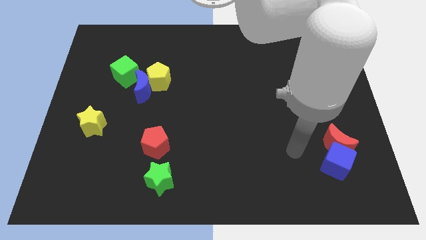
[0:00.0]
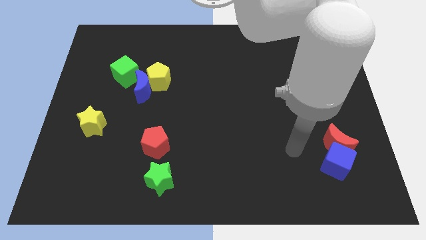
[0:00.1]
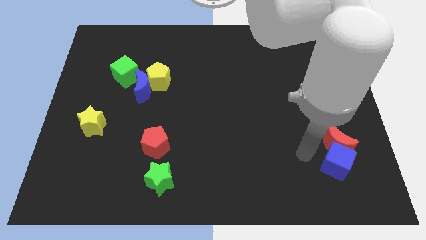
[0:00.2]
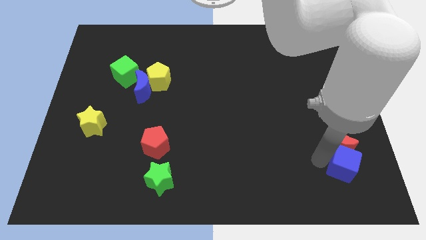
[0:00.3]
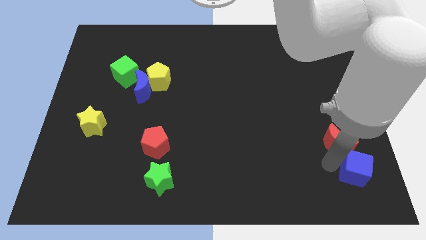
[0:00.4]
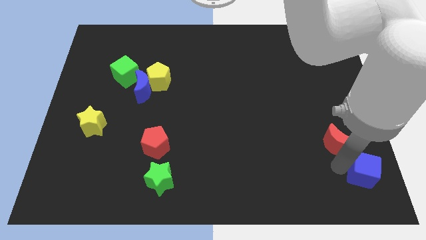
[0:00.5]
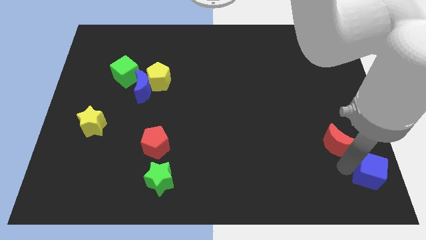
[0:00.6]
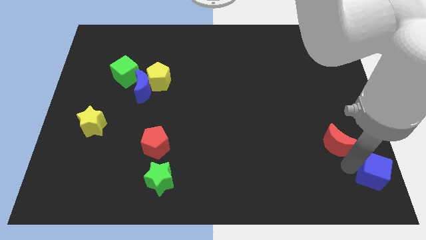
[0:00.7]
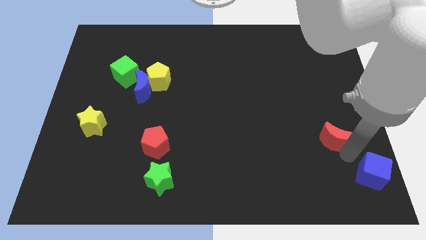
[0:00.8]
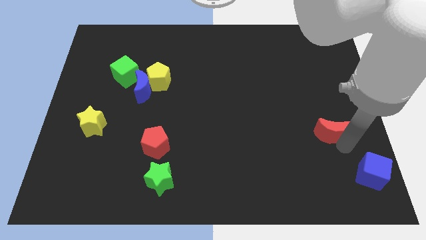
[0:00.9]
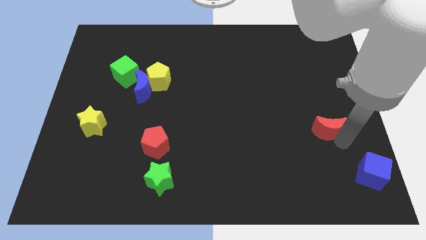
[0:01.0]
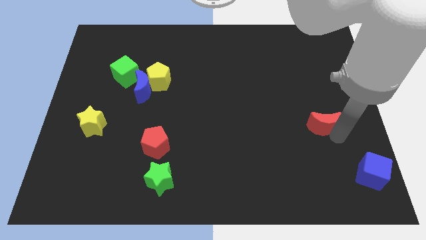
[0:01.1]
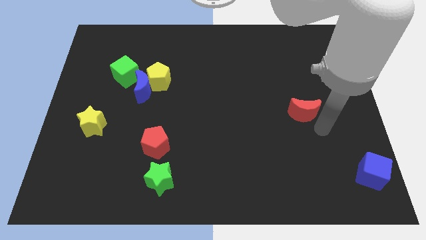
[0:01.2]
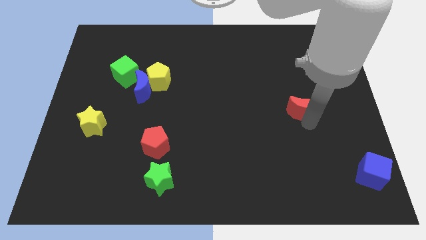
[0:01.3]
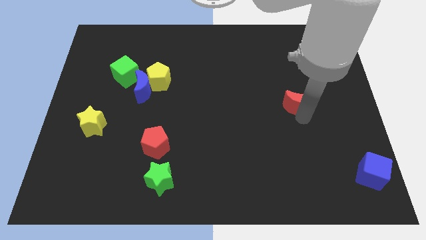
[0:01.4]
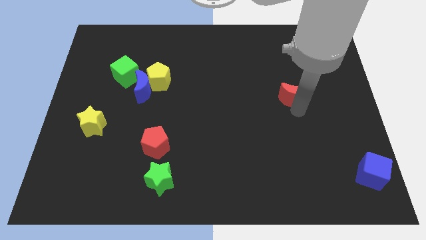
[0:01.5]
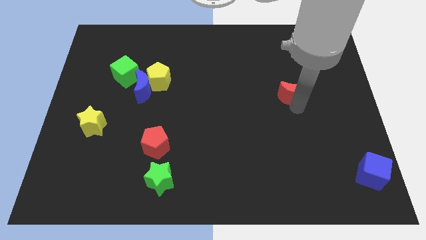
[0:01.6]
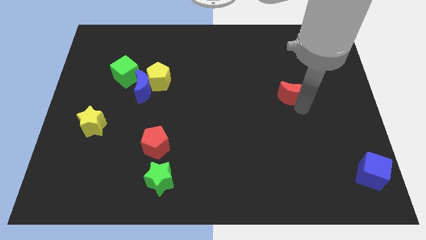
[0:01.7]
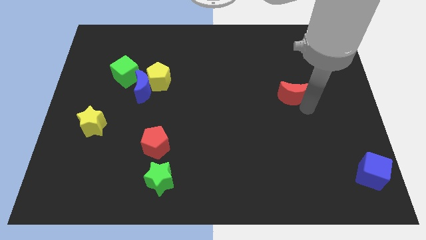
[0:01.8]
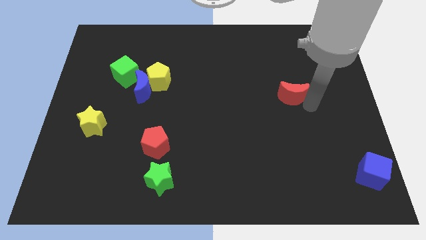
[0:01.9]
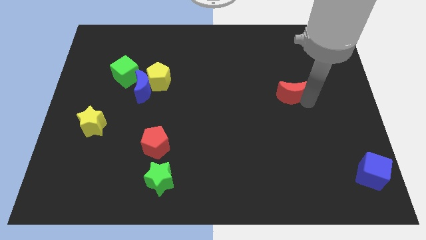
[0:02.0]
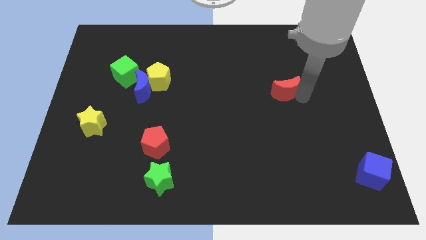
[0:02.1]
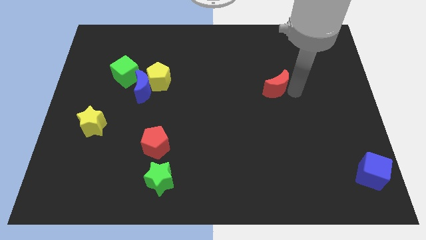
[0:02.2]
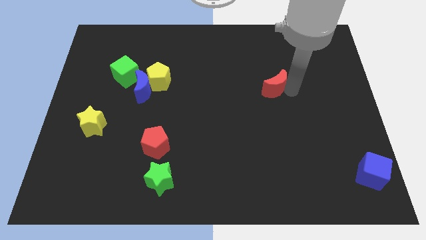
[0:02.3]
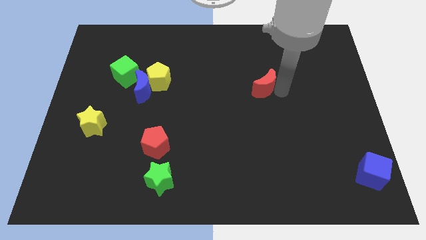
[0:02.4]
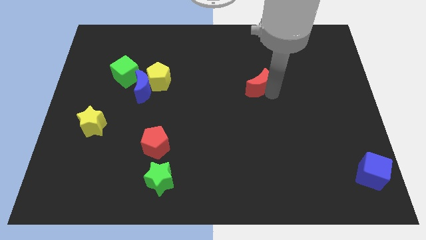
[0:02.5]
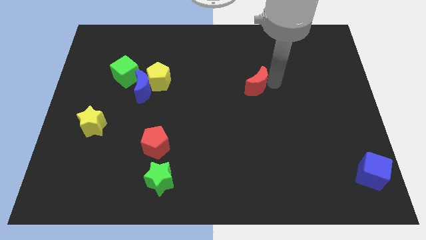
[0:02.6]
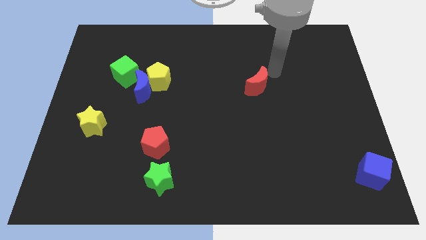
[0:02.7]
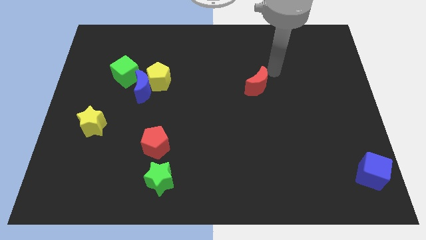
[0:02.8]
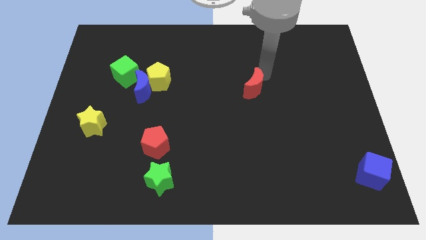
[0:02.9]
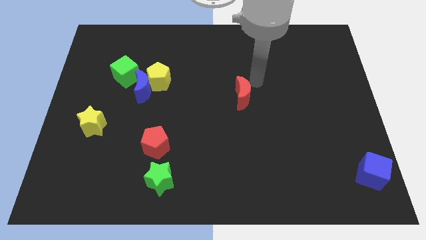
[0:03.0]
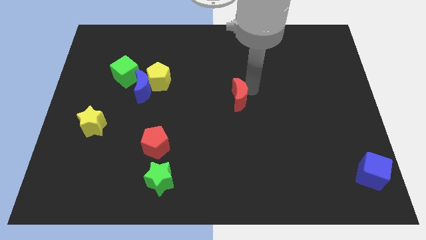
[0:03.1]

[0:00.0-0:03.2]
separate red moon and blue cube

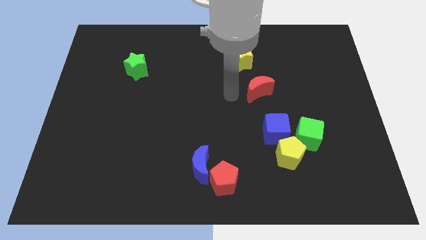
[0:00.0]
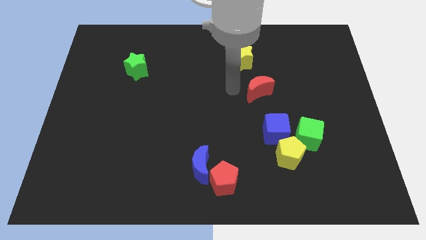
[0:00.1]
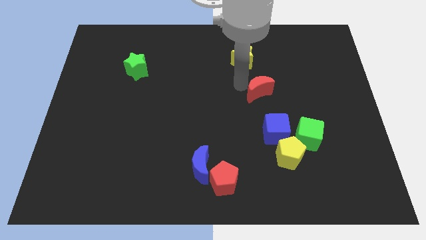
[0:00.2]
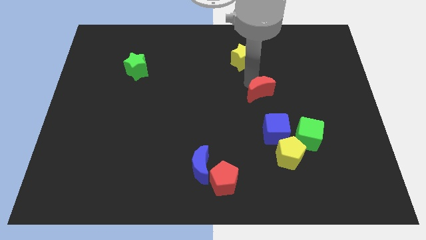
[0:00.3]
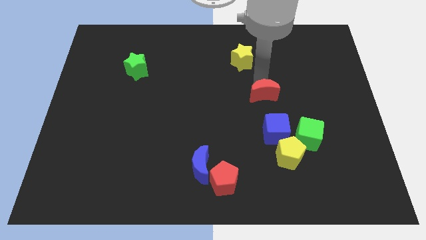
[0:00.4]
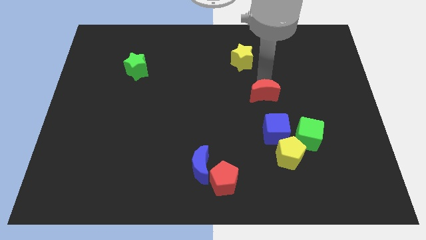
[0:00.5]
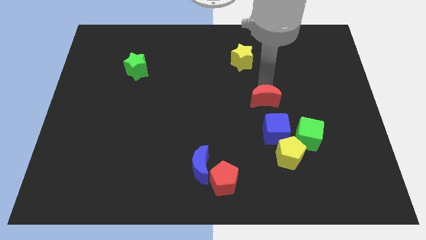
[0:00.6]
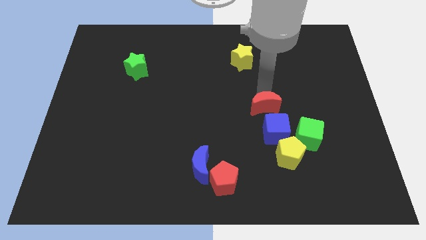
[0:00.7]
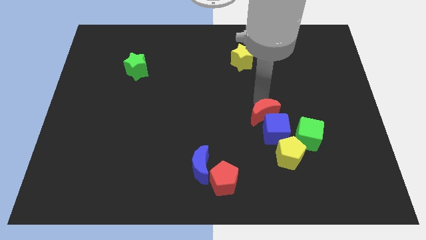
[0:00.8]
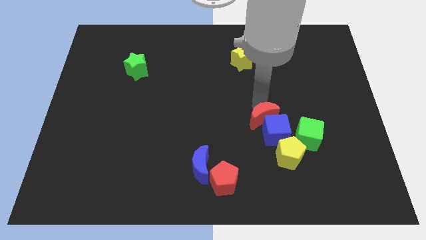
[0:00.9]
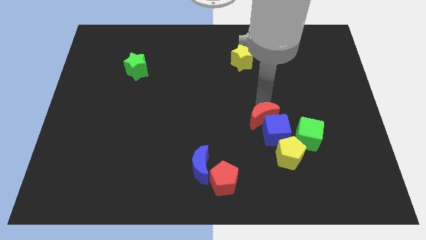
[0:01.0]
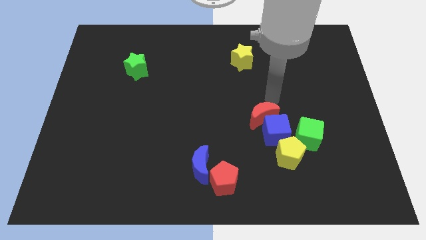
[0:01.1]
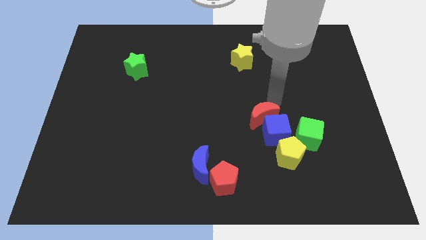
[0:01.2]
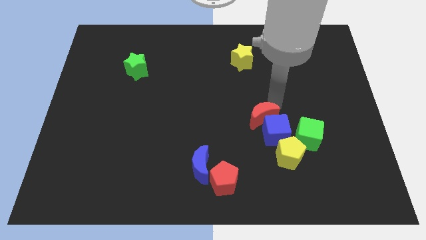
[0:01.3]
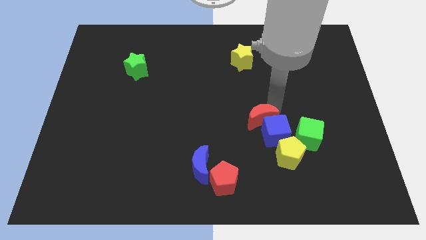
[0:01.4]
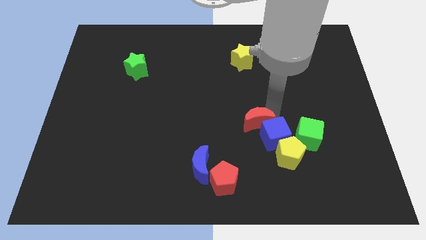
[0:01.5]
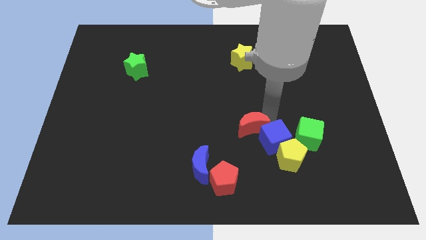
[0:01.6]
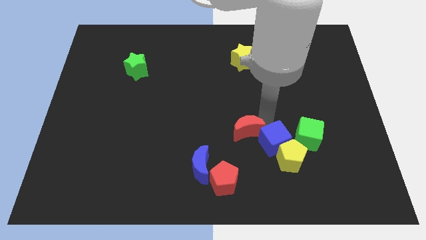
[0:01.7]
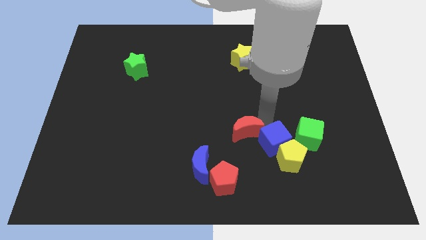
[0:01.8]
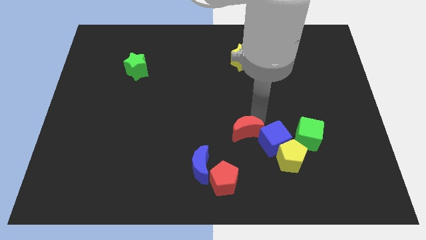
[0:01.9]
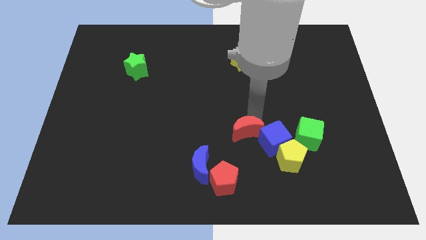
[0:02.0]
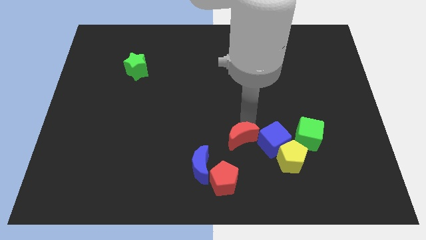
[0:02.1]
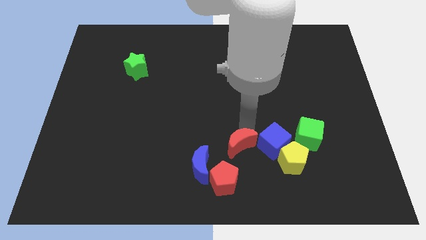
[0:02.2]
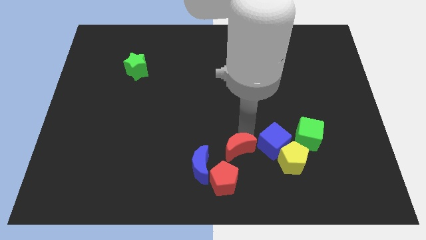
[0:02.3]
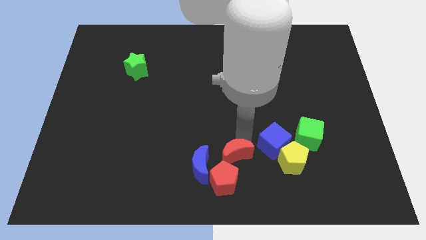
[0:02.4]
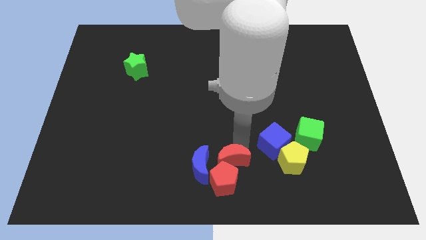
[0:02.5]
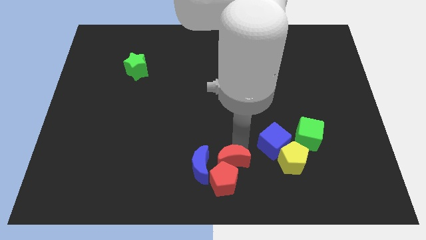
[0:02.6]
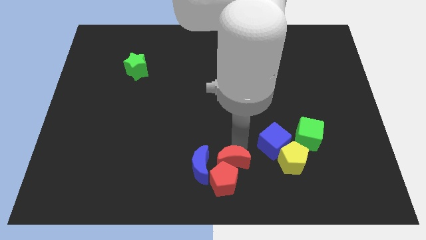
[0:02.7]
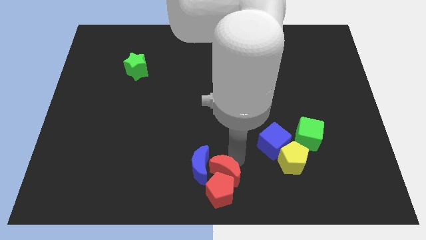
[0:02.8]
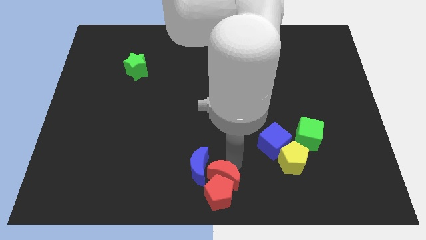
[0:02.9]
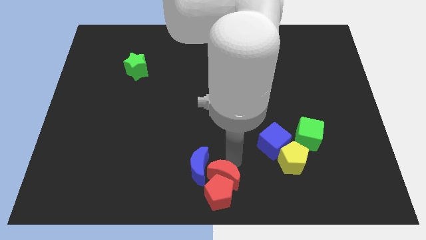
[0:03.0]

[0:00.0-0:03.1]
place the red moon above the red pentagon

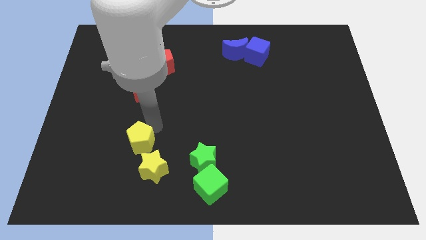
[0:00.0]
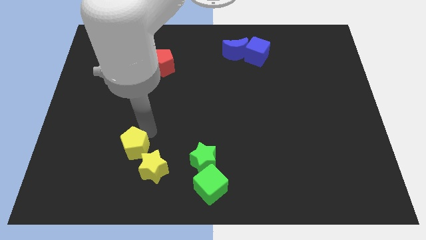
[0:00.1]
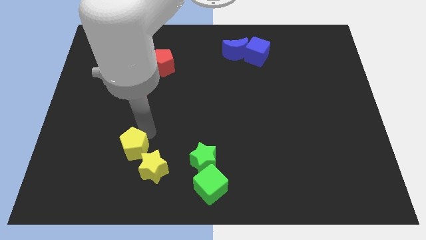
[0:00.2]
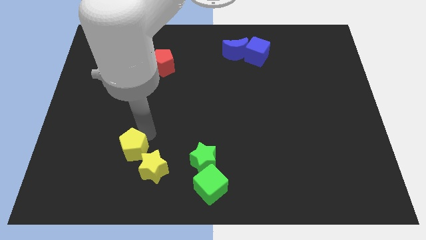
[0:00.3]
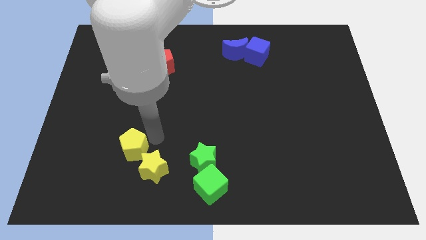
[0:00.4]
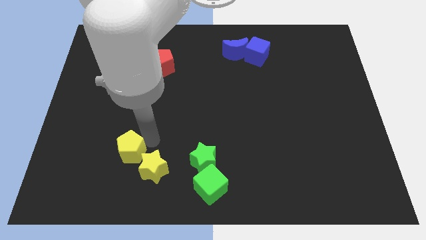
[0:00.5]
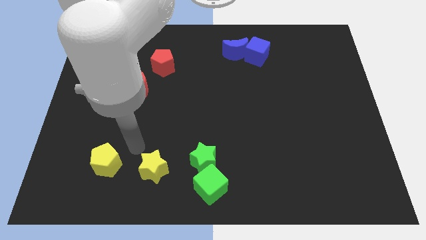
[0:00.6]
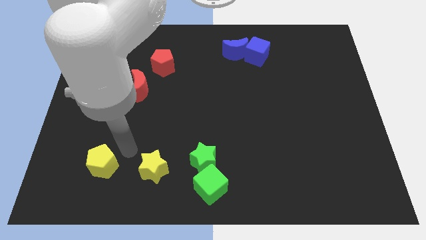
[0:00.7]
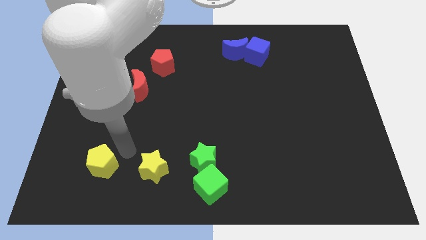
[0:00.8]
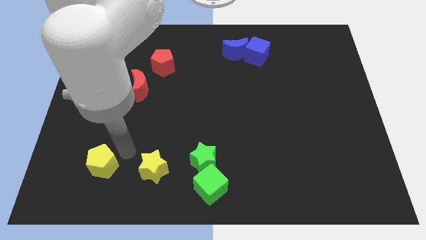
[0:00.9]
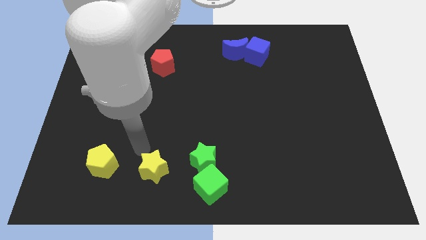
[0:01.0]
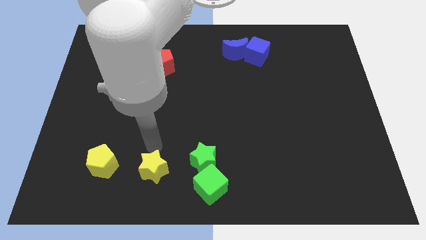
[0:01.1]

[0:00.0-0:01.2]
push the yellow pentagon to the left side of the yellow star

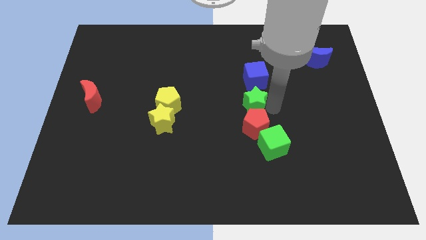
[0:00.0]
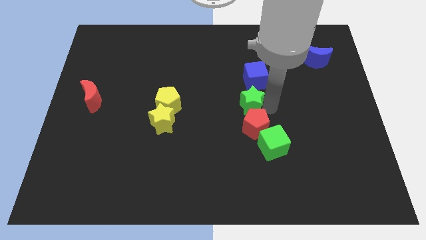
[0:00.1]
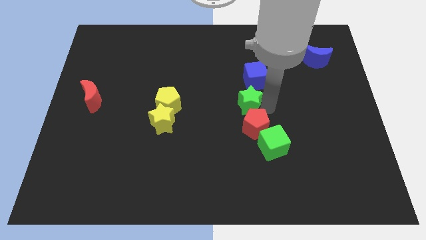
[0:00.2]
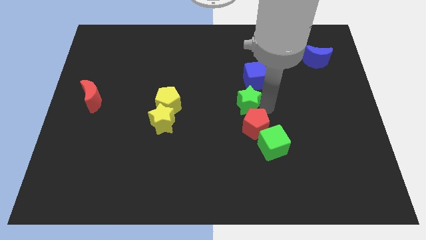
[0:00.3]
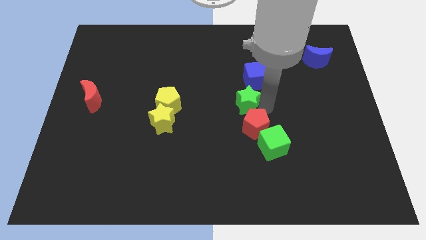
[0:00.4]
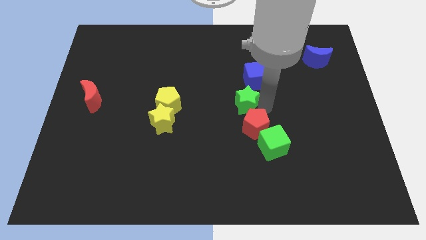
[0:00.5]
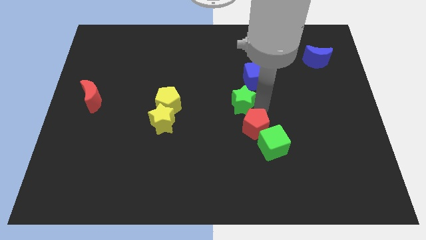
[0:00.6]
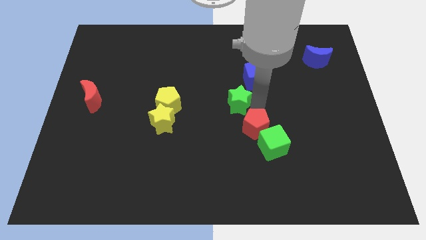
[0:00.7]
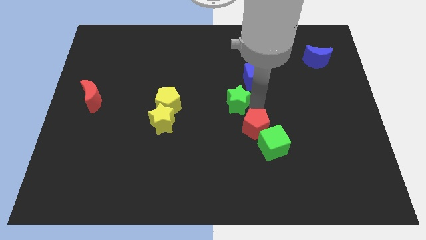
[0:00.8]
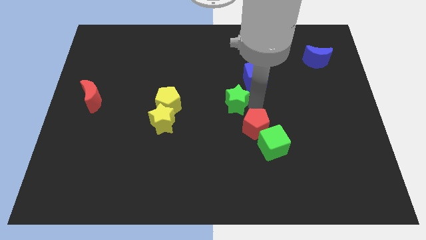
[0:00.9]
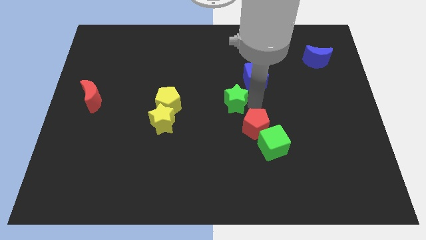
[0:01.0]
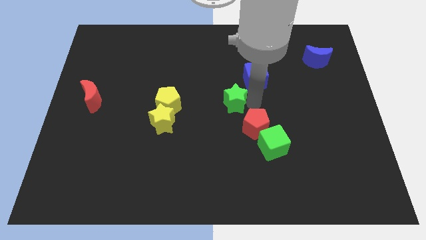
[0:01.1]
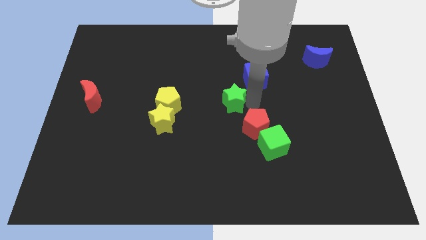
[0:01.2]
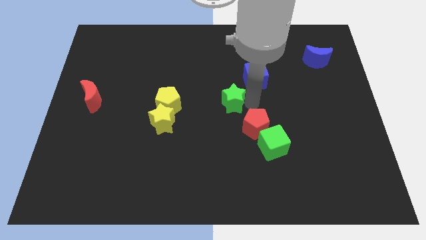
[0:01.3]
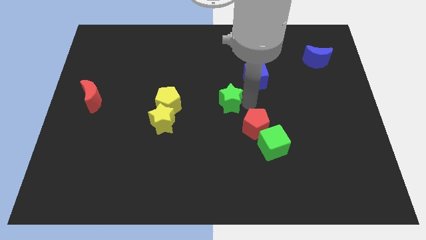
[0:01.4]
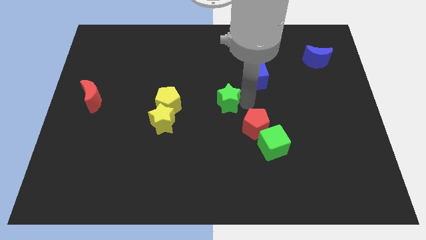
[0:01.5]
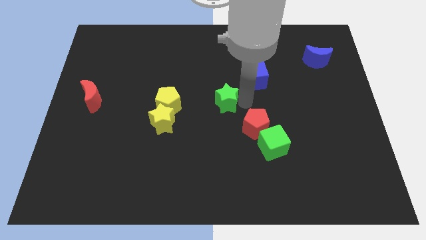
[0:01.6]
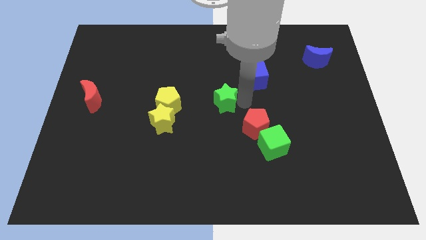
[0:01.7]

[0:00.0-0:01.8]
move the green star to the center
